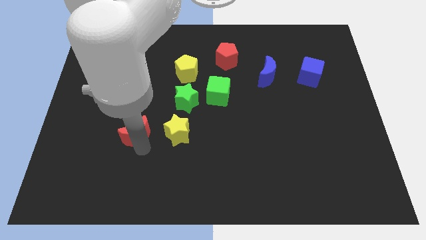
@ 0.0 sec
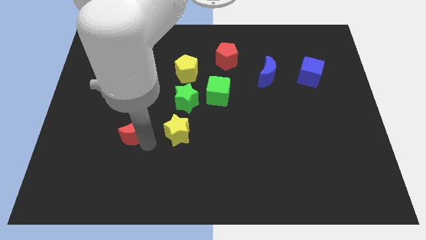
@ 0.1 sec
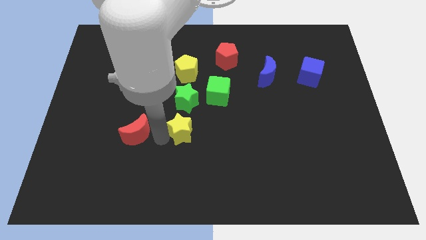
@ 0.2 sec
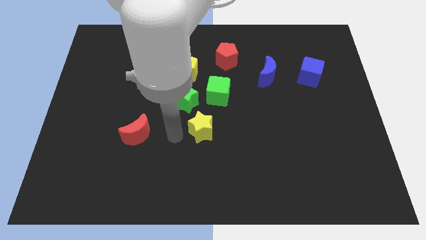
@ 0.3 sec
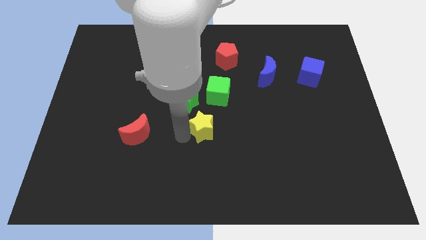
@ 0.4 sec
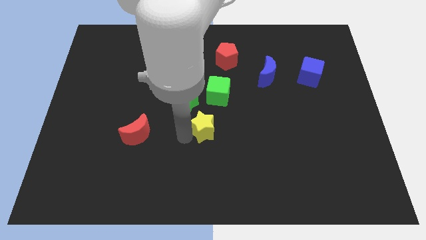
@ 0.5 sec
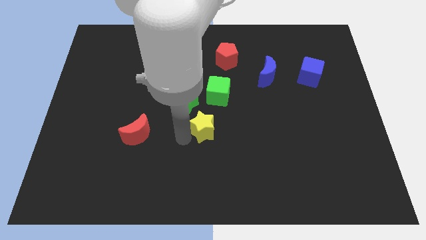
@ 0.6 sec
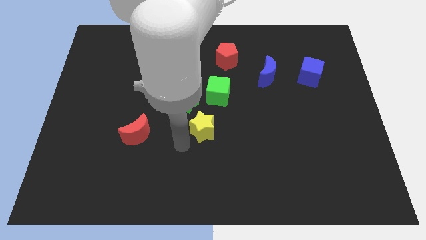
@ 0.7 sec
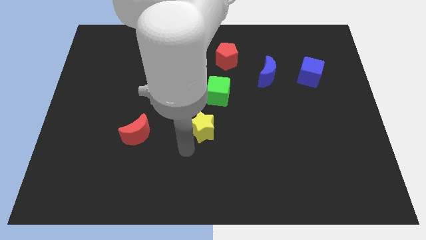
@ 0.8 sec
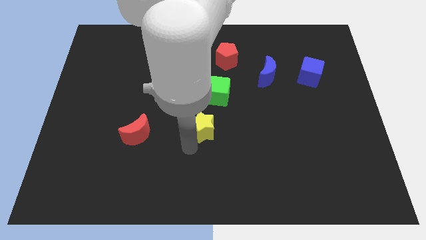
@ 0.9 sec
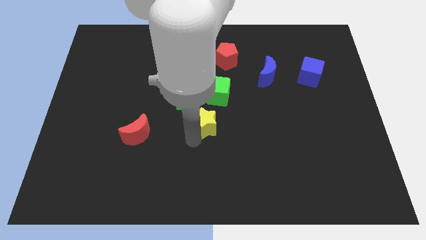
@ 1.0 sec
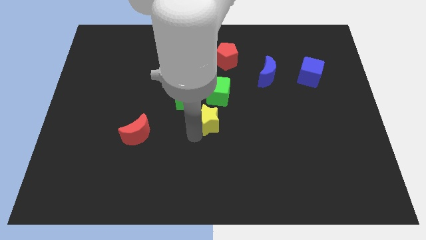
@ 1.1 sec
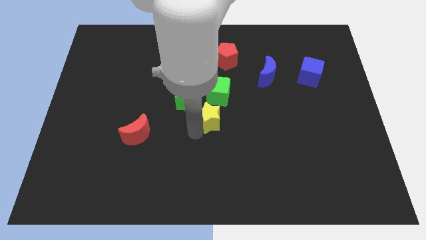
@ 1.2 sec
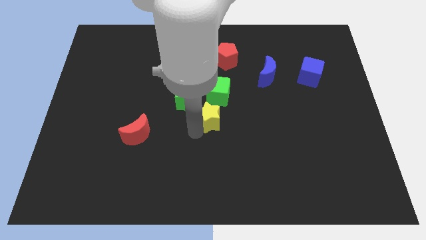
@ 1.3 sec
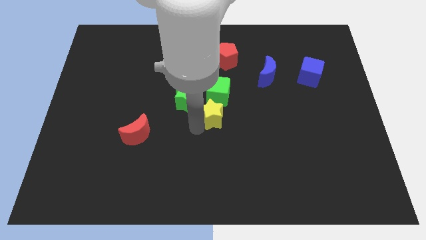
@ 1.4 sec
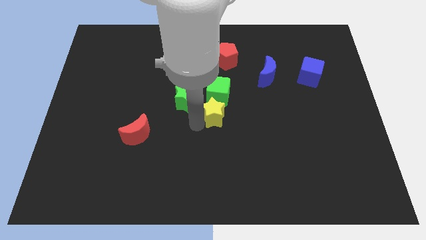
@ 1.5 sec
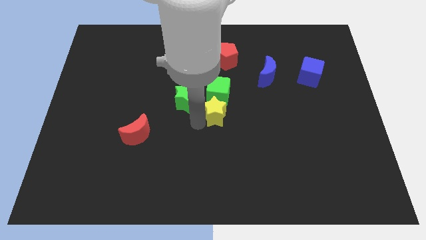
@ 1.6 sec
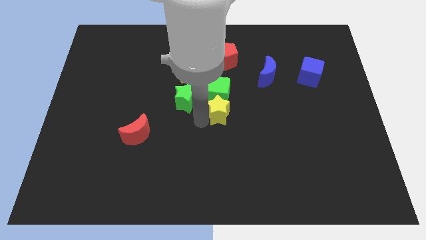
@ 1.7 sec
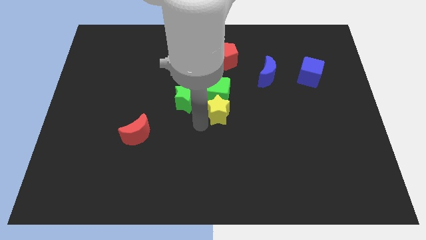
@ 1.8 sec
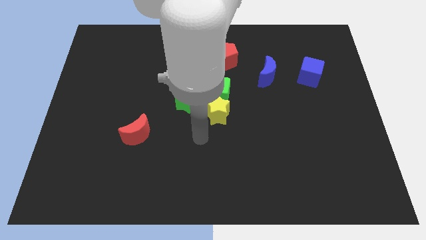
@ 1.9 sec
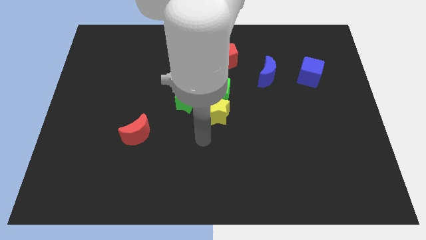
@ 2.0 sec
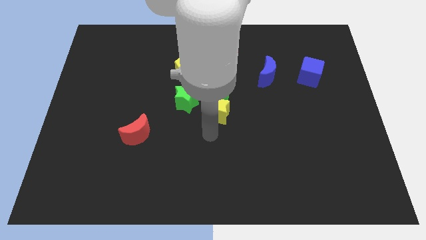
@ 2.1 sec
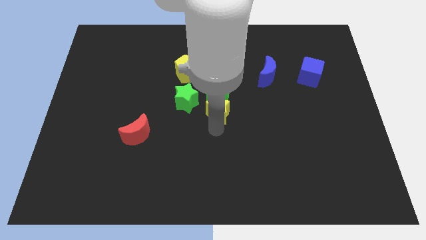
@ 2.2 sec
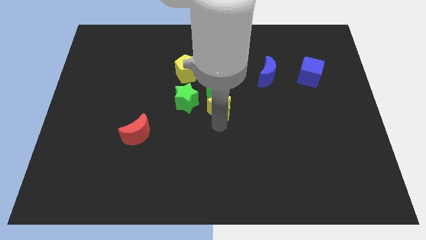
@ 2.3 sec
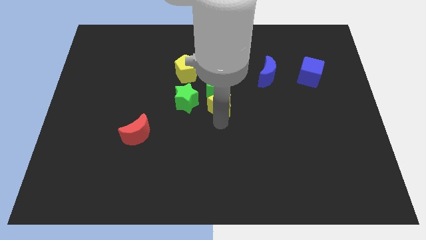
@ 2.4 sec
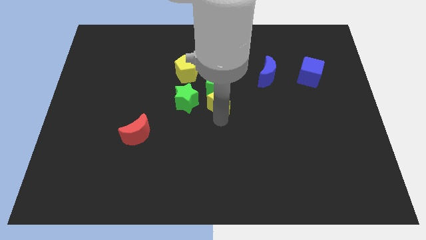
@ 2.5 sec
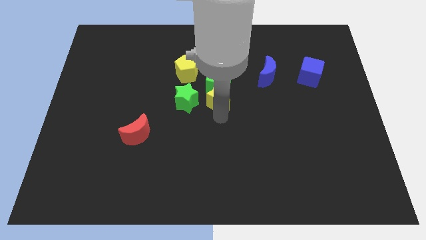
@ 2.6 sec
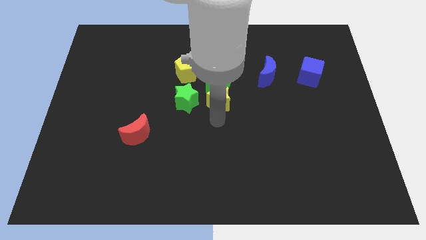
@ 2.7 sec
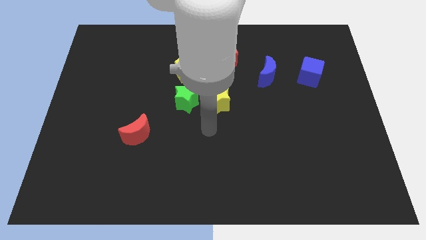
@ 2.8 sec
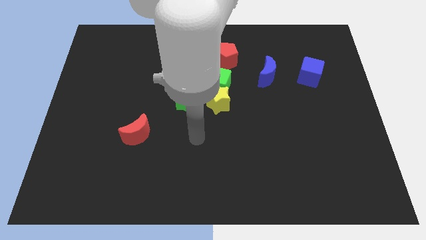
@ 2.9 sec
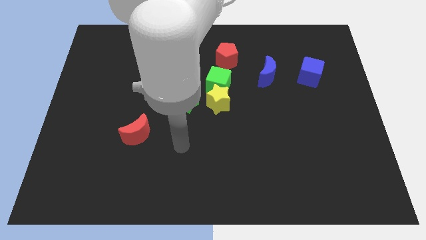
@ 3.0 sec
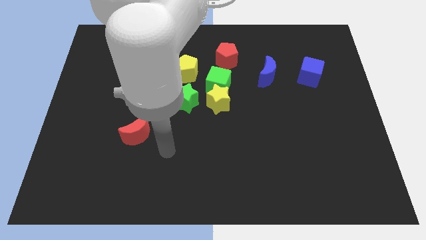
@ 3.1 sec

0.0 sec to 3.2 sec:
slide yellow star into green cube

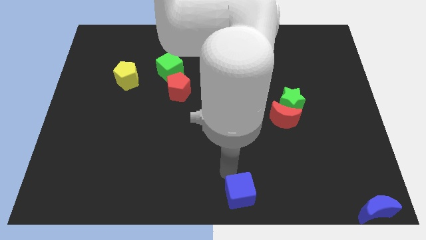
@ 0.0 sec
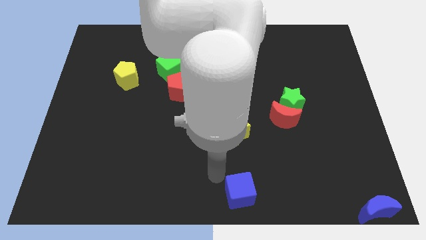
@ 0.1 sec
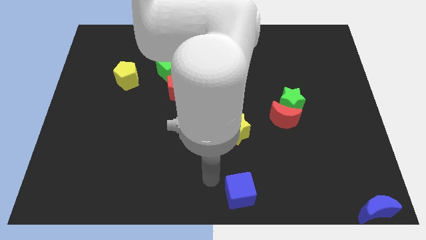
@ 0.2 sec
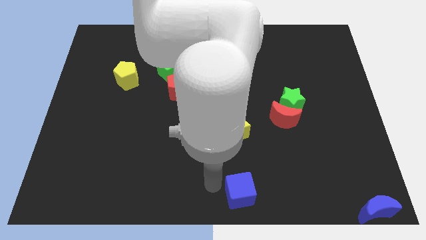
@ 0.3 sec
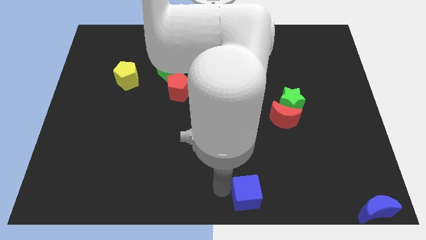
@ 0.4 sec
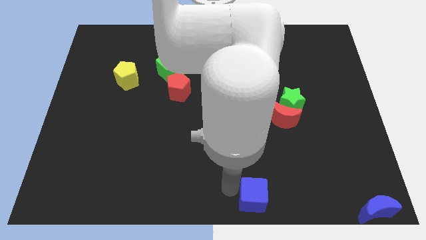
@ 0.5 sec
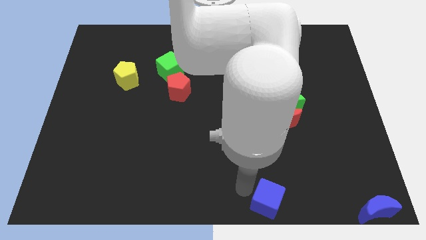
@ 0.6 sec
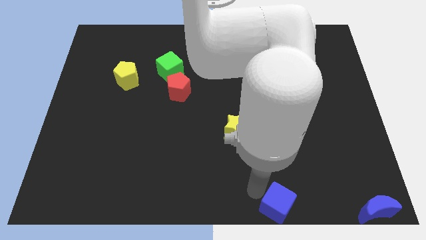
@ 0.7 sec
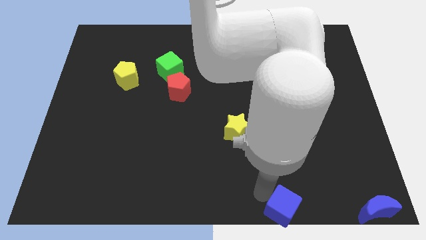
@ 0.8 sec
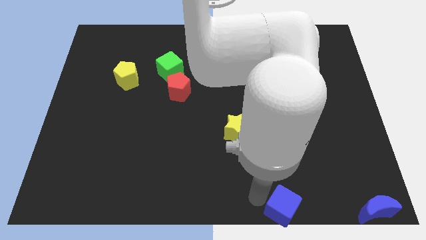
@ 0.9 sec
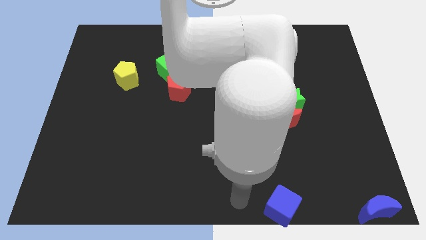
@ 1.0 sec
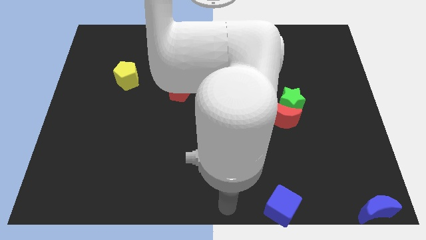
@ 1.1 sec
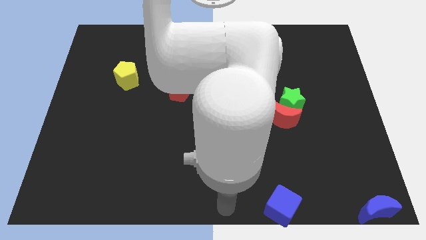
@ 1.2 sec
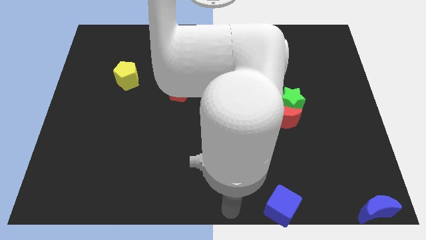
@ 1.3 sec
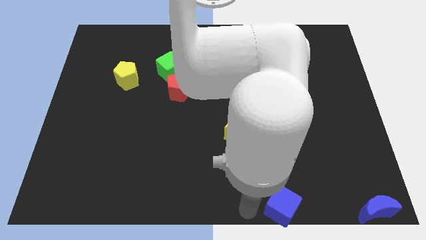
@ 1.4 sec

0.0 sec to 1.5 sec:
place the blue cube left to the blue moon

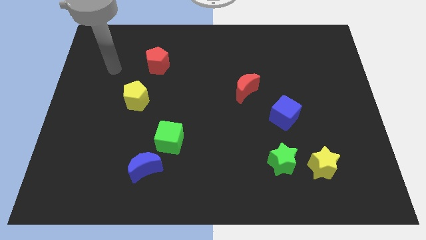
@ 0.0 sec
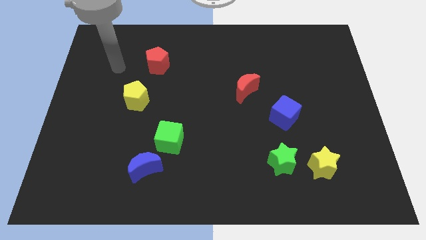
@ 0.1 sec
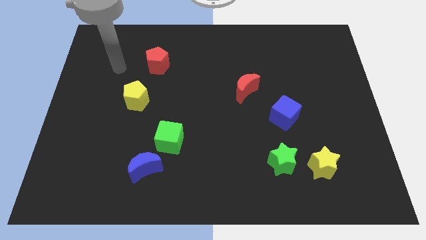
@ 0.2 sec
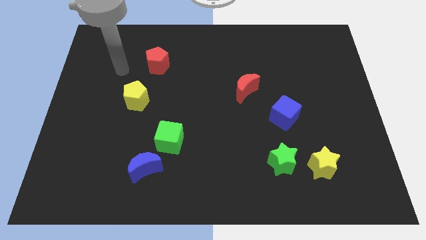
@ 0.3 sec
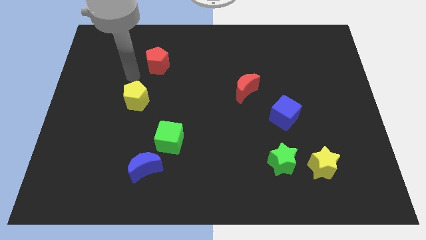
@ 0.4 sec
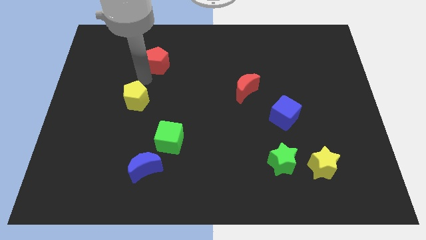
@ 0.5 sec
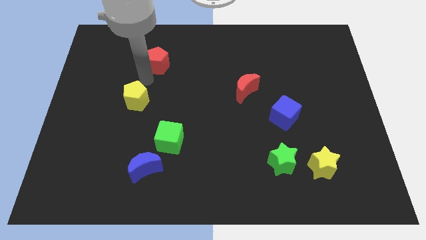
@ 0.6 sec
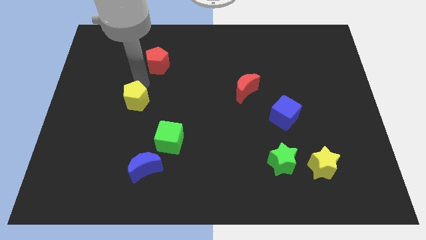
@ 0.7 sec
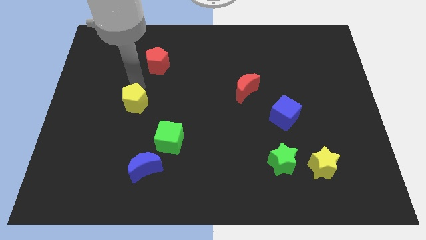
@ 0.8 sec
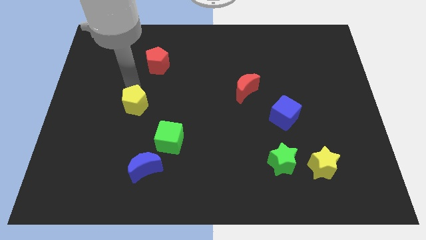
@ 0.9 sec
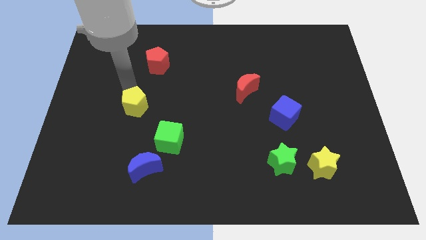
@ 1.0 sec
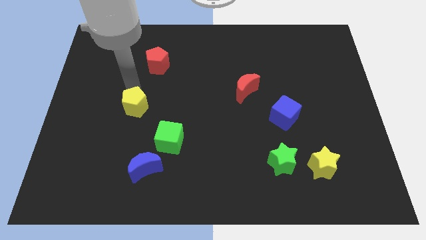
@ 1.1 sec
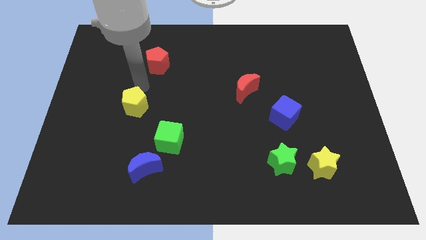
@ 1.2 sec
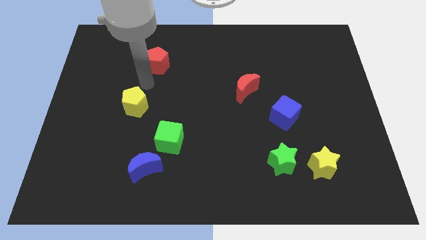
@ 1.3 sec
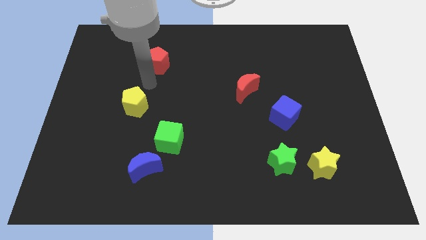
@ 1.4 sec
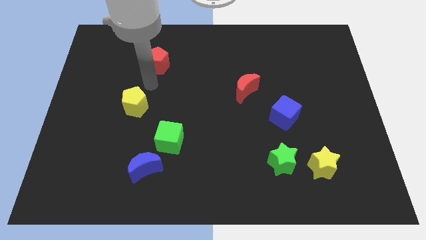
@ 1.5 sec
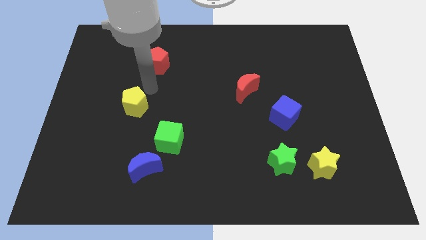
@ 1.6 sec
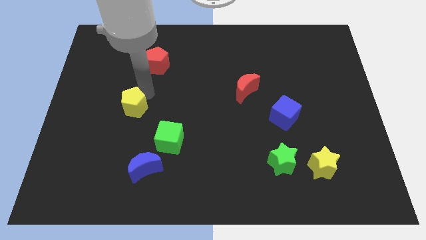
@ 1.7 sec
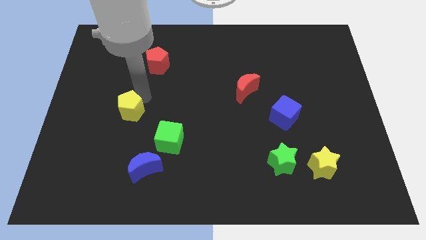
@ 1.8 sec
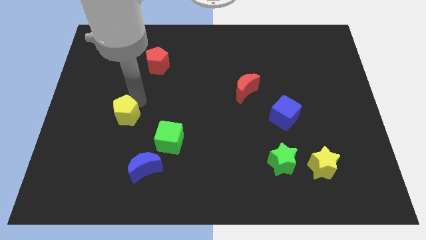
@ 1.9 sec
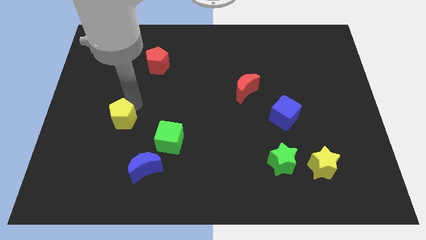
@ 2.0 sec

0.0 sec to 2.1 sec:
slide yellow pentagon to the top left of green cube

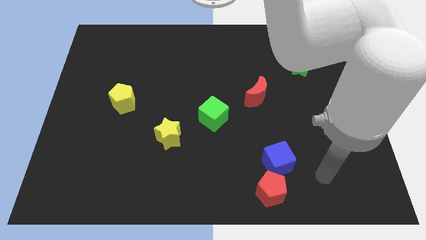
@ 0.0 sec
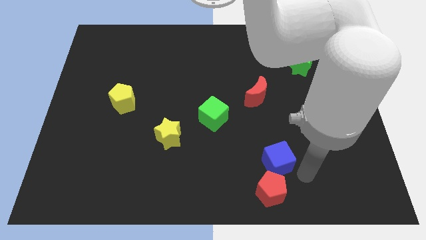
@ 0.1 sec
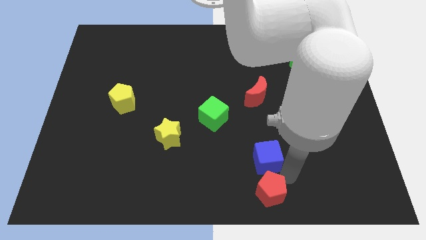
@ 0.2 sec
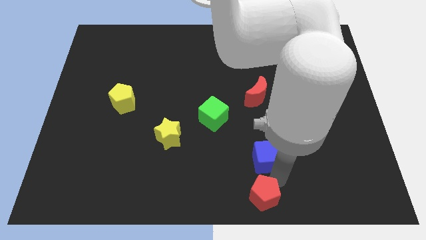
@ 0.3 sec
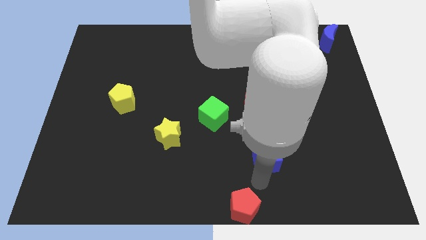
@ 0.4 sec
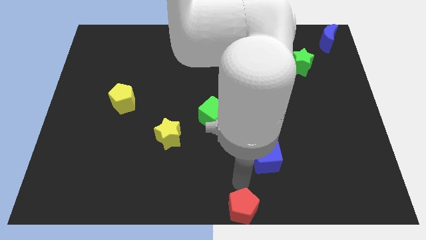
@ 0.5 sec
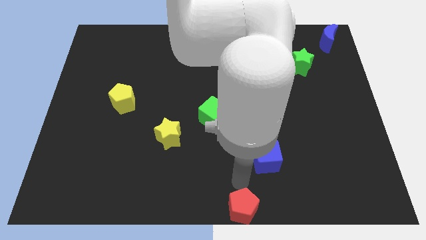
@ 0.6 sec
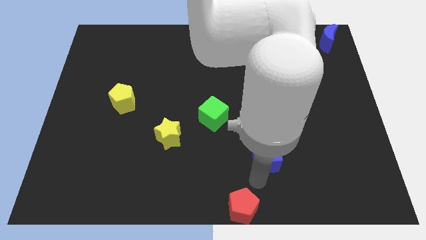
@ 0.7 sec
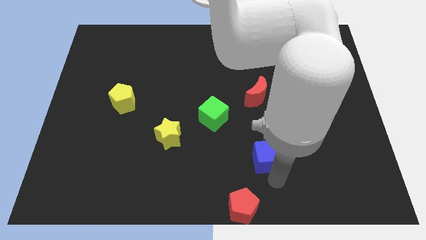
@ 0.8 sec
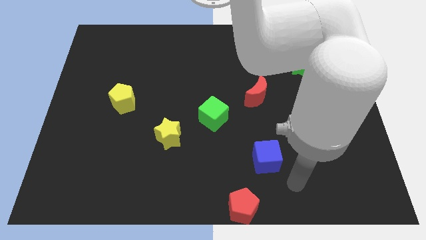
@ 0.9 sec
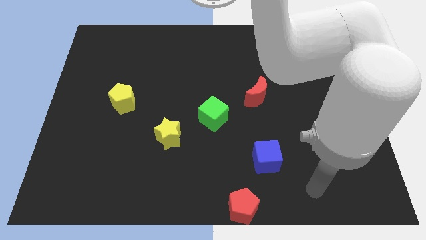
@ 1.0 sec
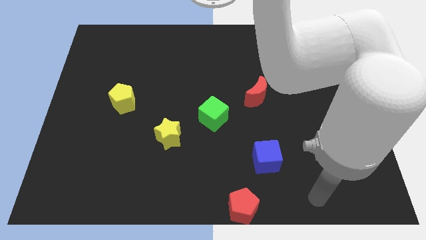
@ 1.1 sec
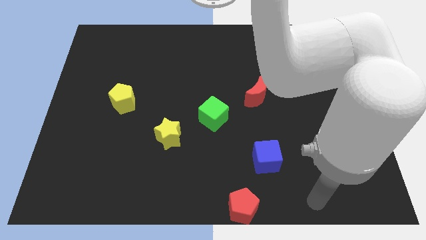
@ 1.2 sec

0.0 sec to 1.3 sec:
separate the red pentagon and the blue cube

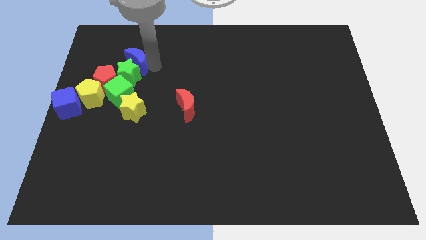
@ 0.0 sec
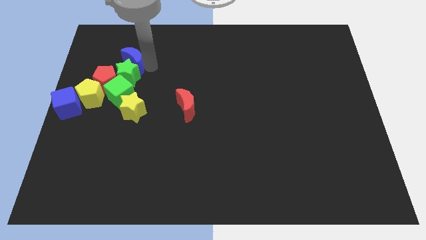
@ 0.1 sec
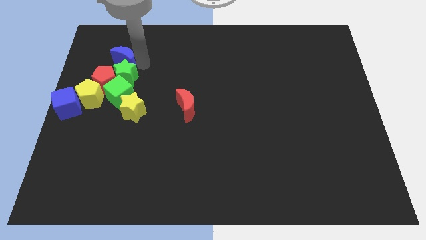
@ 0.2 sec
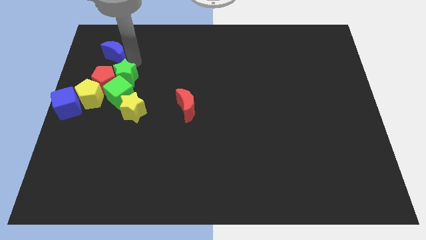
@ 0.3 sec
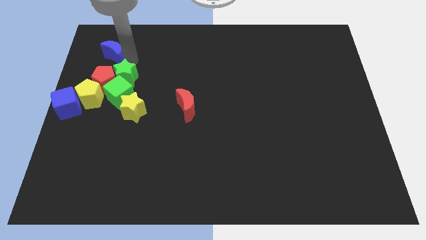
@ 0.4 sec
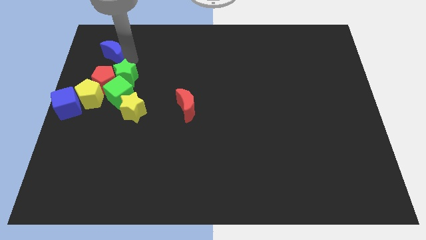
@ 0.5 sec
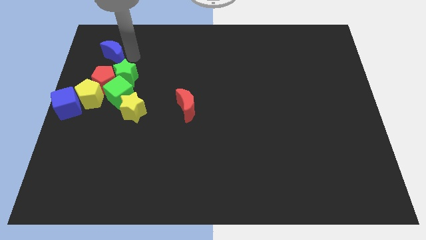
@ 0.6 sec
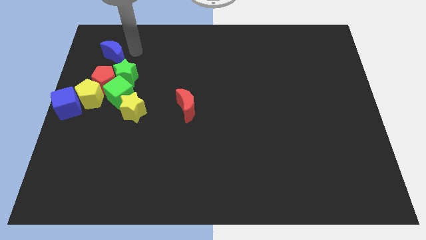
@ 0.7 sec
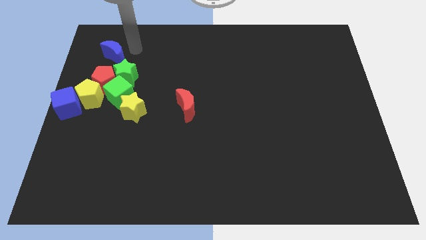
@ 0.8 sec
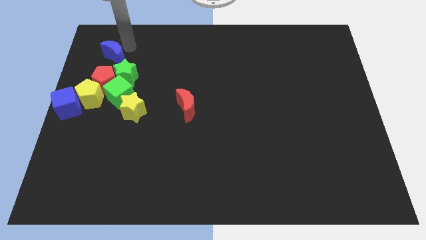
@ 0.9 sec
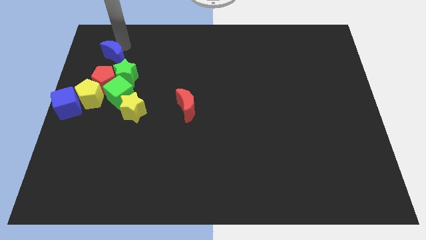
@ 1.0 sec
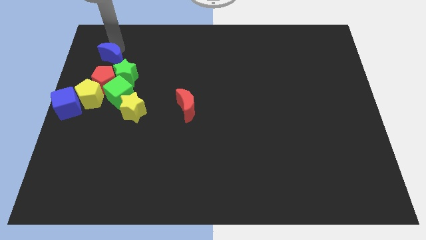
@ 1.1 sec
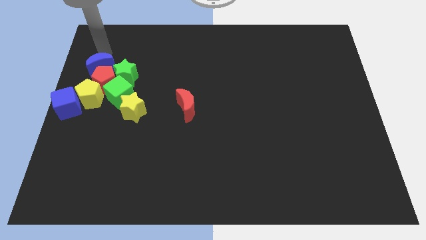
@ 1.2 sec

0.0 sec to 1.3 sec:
place the blue crescent above the red pentagon
